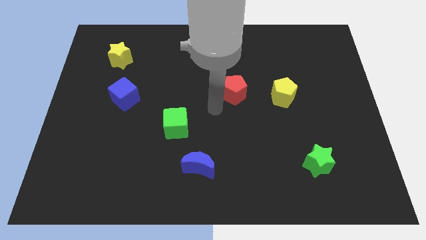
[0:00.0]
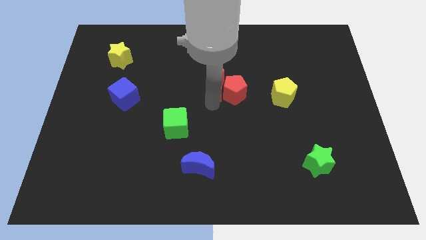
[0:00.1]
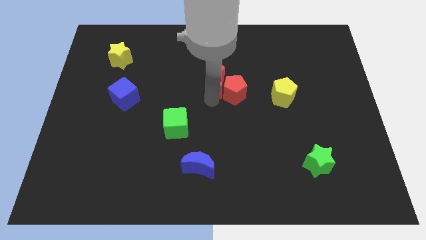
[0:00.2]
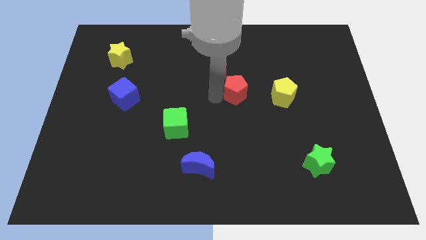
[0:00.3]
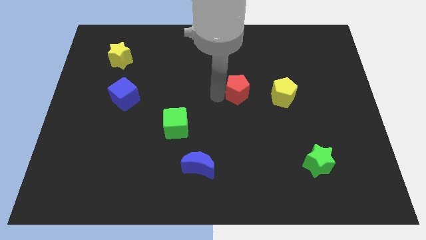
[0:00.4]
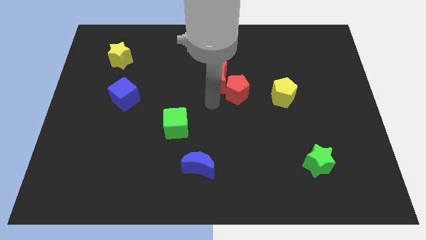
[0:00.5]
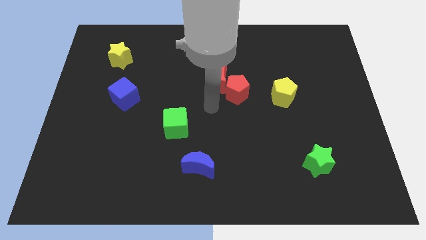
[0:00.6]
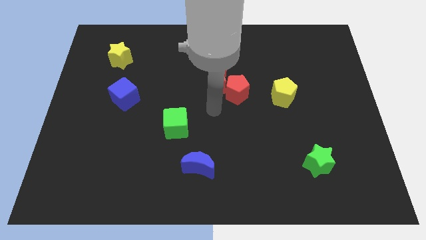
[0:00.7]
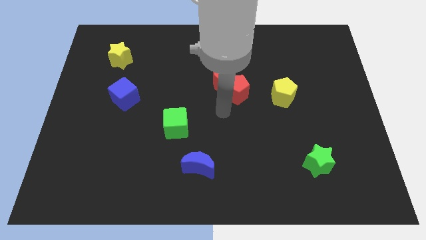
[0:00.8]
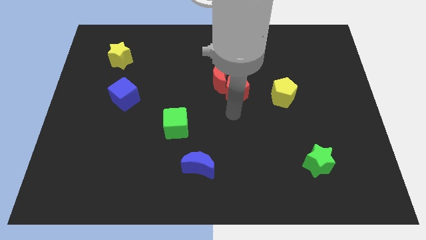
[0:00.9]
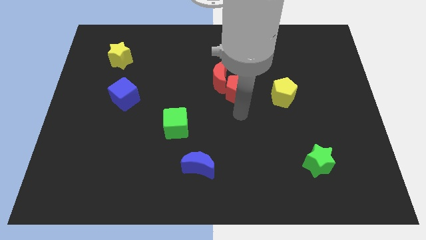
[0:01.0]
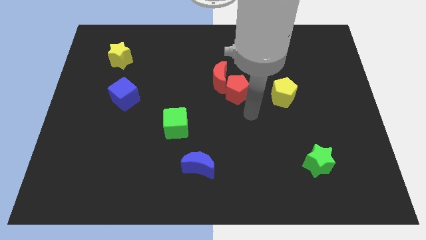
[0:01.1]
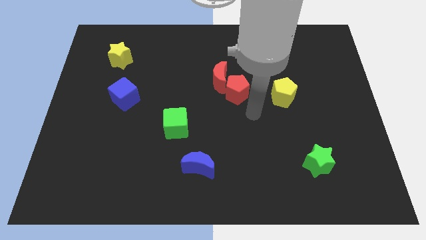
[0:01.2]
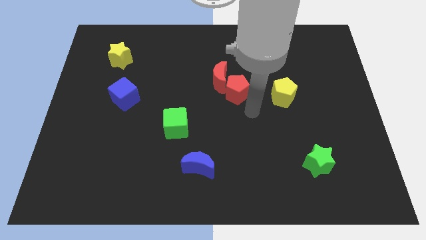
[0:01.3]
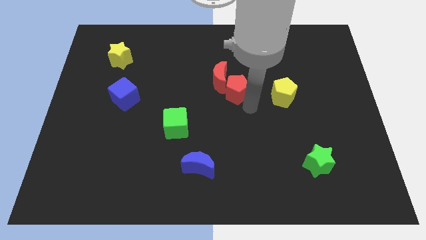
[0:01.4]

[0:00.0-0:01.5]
slightly move two red objects

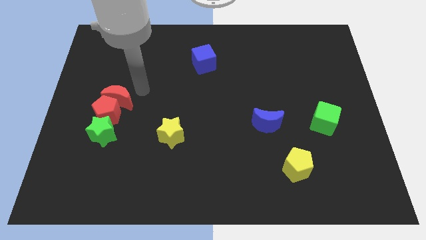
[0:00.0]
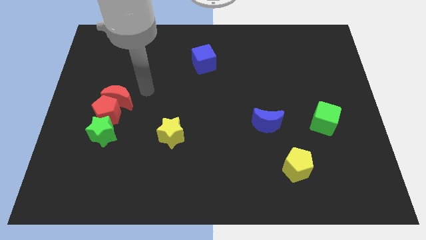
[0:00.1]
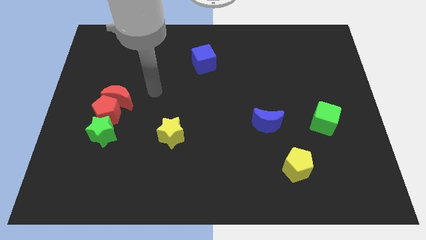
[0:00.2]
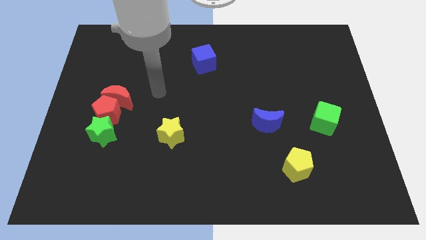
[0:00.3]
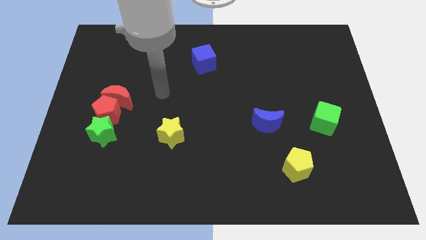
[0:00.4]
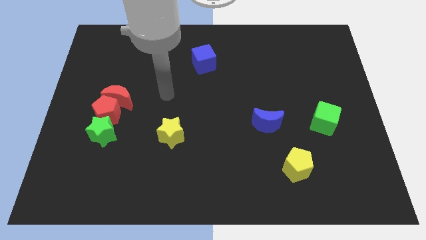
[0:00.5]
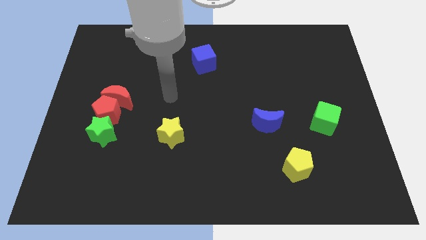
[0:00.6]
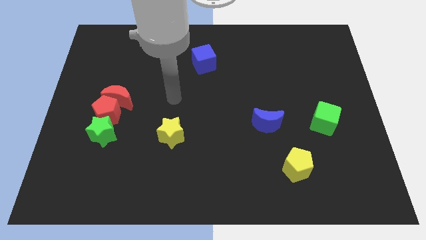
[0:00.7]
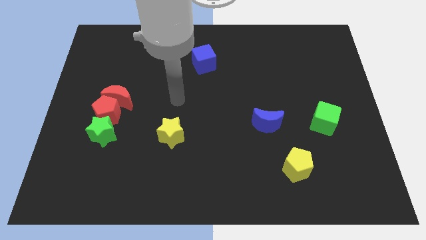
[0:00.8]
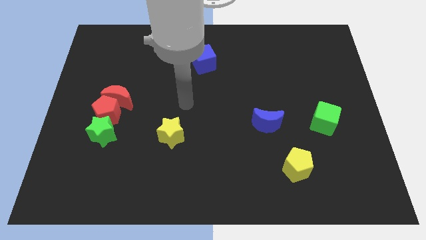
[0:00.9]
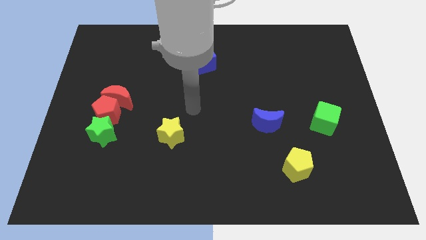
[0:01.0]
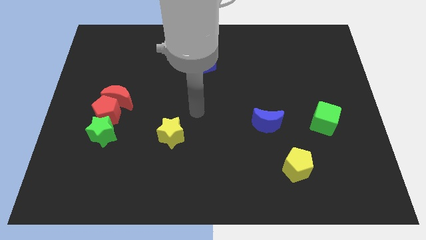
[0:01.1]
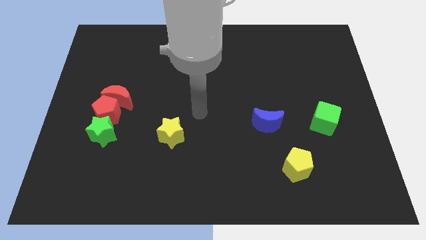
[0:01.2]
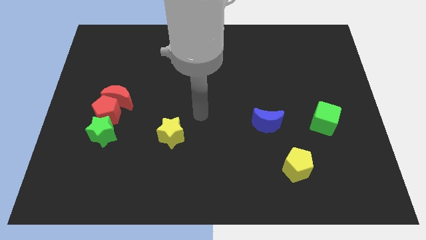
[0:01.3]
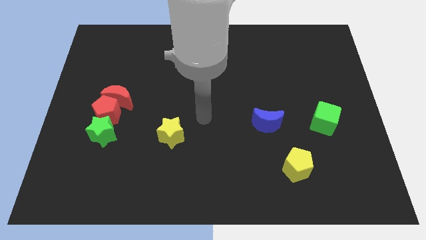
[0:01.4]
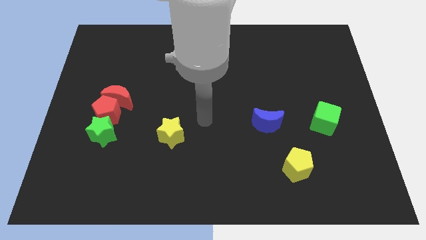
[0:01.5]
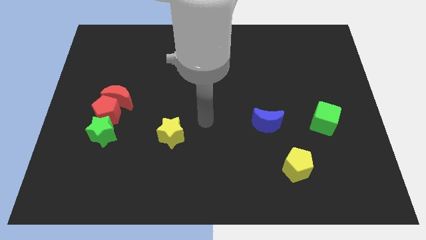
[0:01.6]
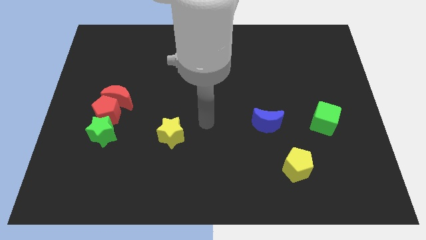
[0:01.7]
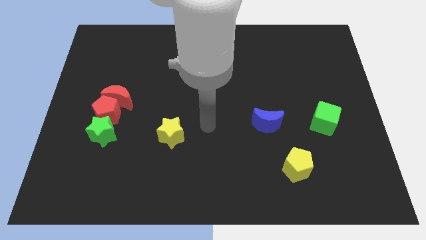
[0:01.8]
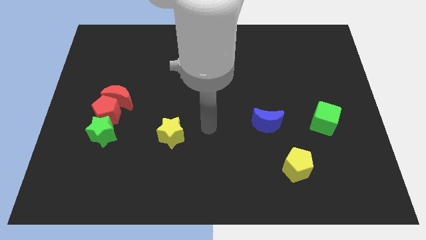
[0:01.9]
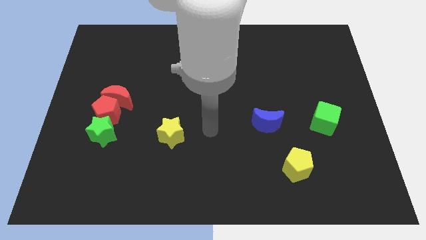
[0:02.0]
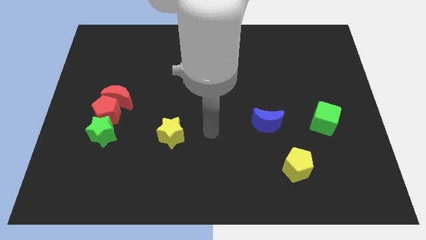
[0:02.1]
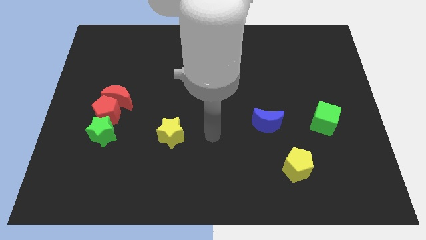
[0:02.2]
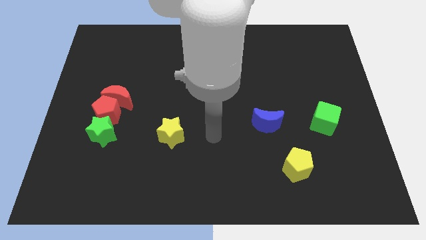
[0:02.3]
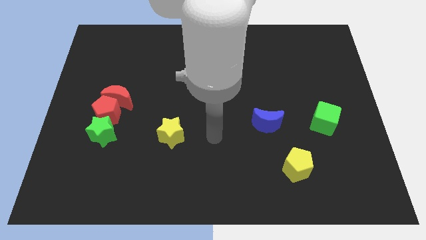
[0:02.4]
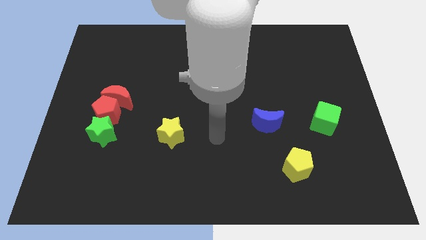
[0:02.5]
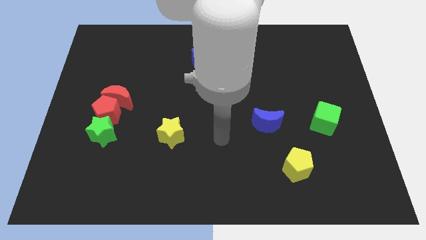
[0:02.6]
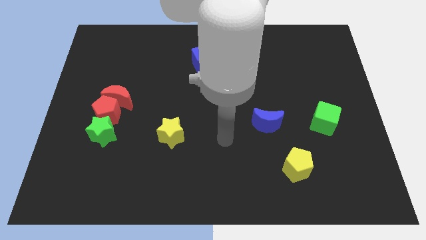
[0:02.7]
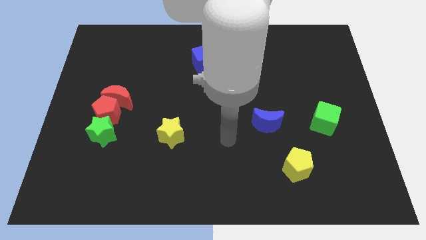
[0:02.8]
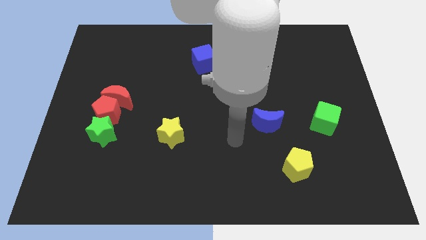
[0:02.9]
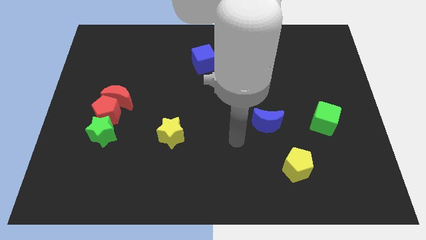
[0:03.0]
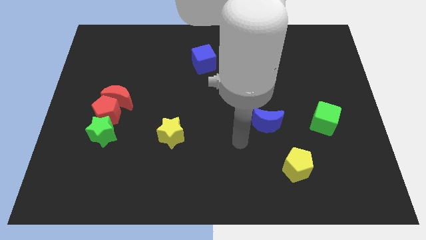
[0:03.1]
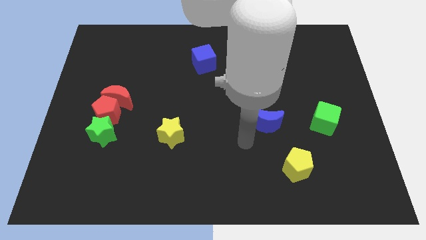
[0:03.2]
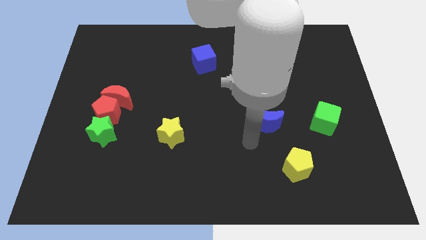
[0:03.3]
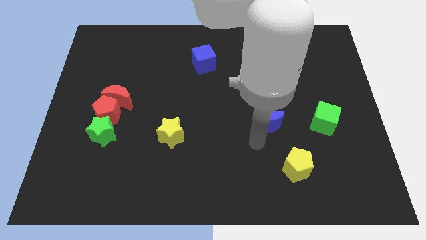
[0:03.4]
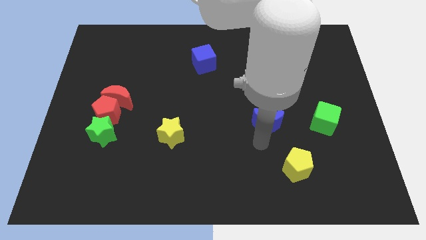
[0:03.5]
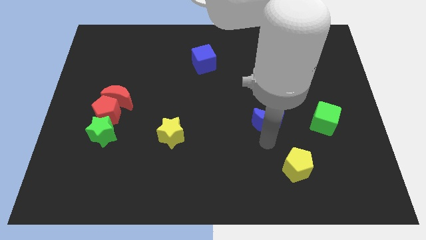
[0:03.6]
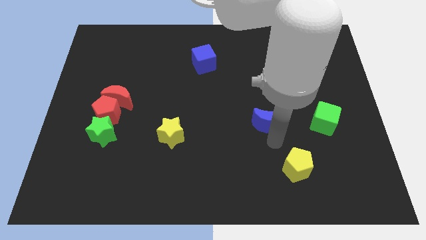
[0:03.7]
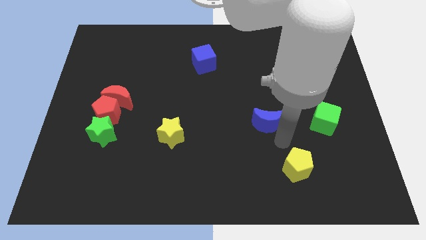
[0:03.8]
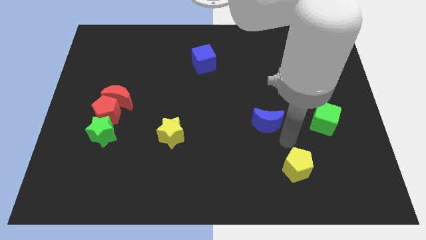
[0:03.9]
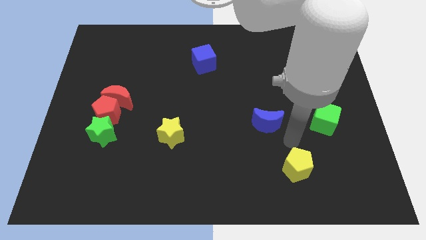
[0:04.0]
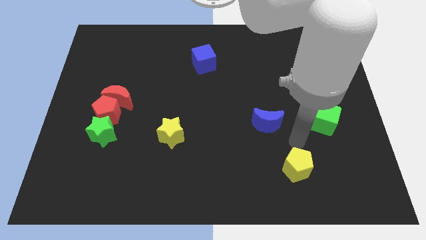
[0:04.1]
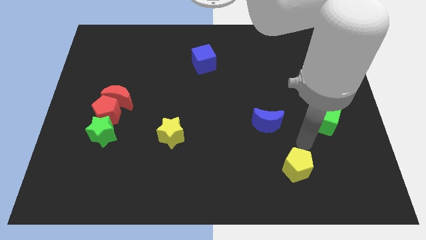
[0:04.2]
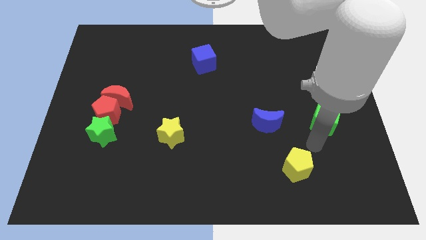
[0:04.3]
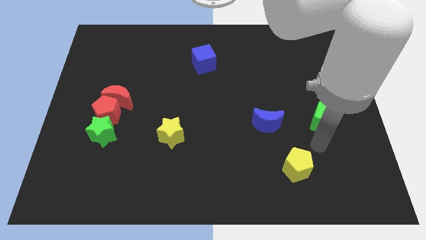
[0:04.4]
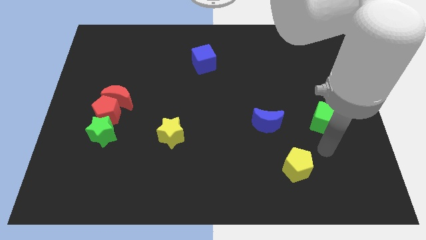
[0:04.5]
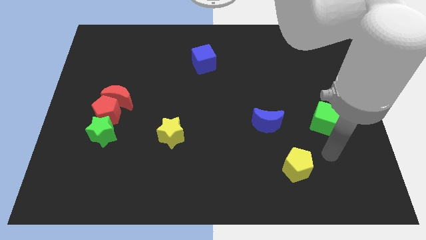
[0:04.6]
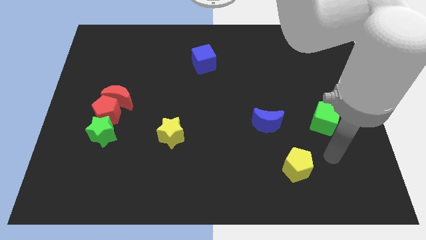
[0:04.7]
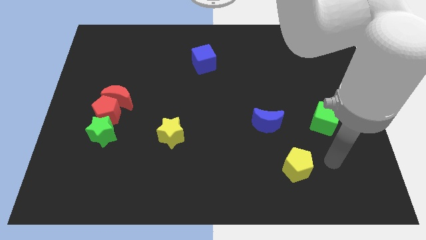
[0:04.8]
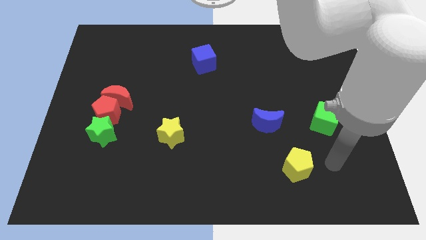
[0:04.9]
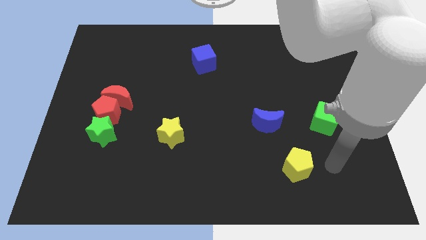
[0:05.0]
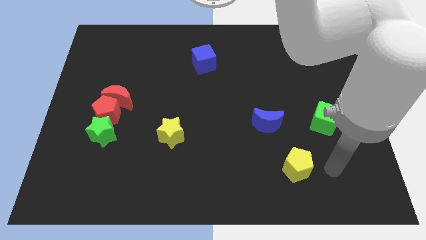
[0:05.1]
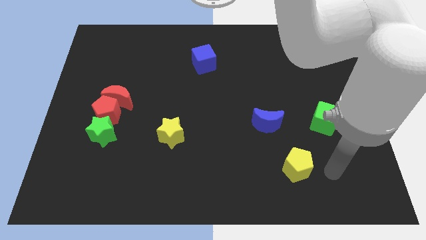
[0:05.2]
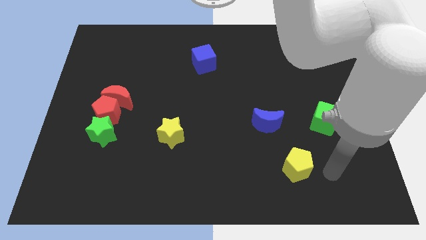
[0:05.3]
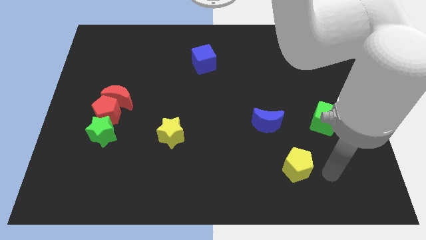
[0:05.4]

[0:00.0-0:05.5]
move your arm away from the red moon

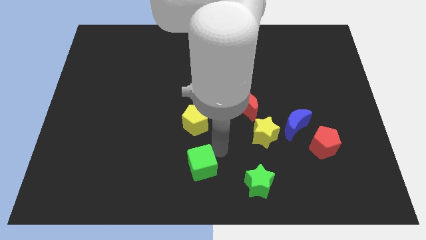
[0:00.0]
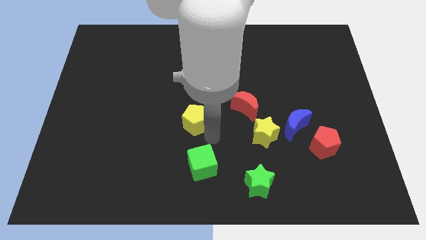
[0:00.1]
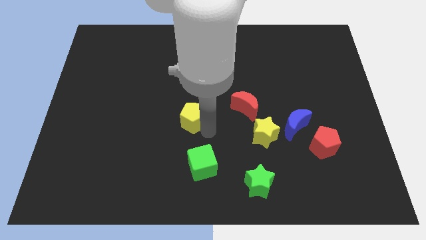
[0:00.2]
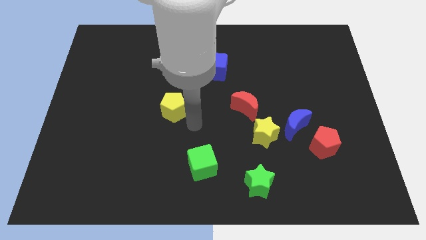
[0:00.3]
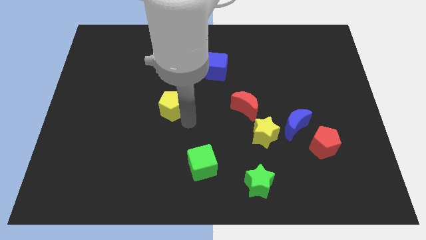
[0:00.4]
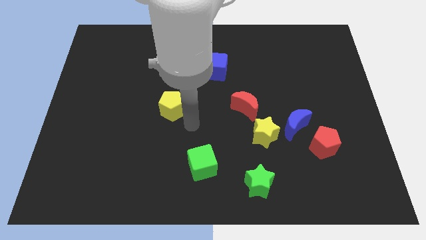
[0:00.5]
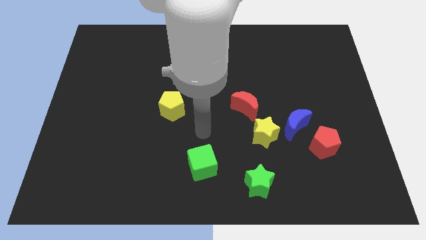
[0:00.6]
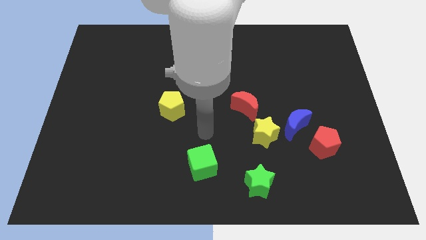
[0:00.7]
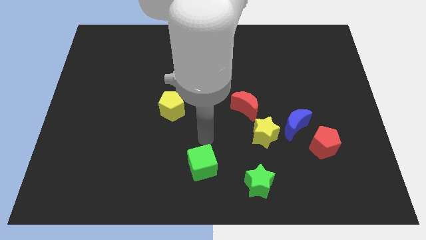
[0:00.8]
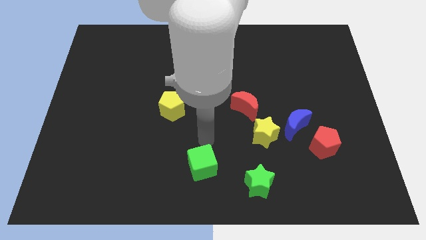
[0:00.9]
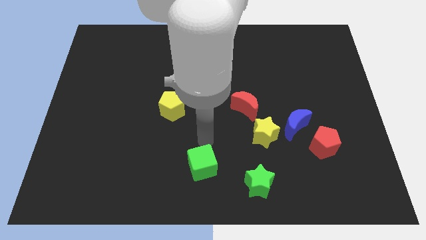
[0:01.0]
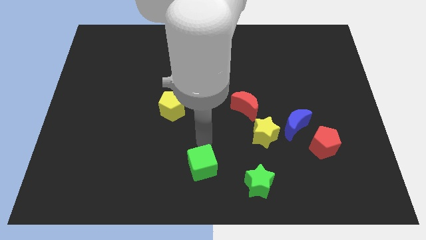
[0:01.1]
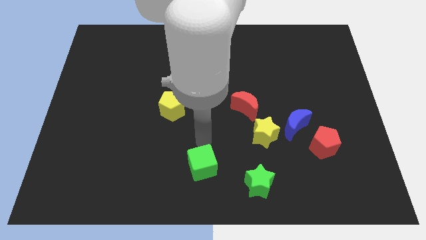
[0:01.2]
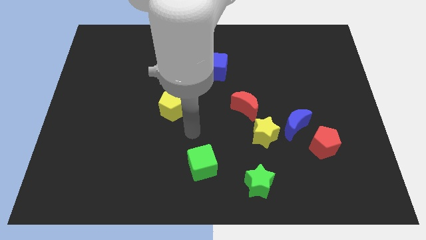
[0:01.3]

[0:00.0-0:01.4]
place the yellow pentagon horizontally to the left side of the red moon

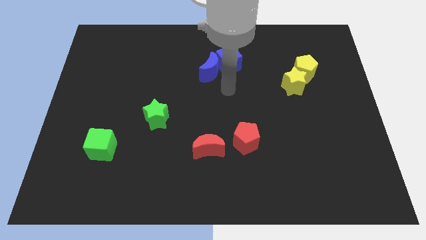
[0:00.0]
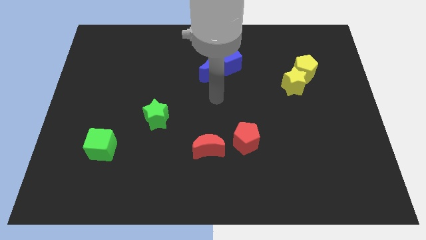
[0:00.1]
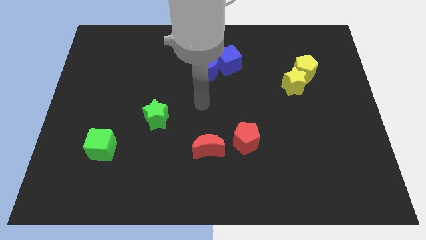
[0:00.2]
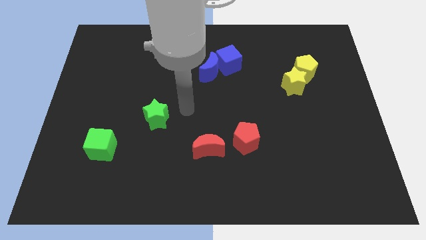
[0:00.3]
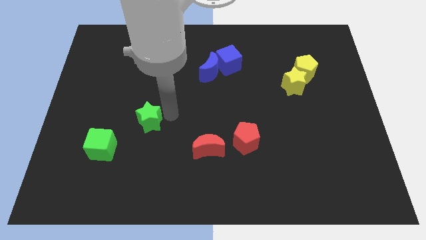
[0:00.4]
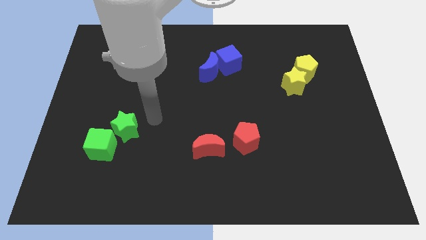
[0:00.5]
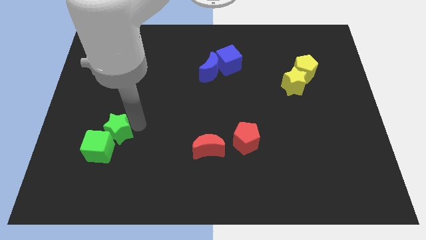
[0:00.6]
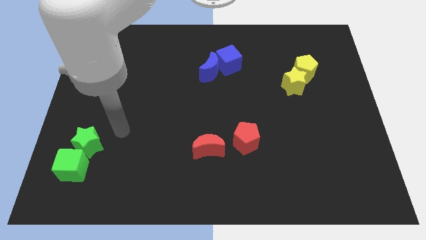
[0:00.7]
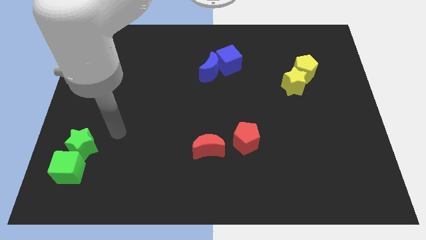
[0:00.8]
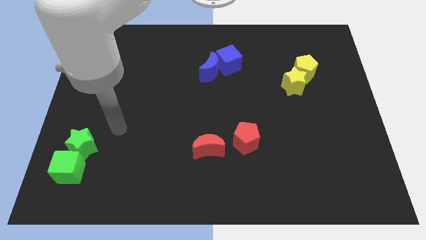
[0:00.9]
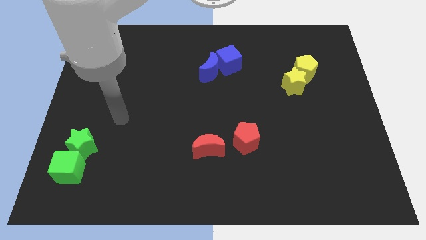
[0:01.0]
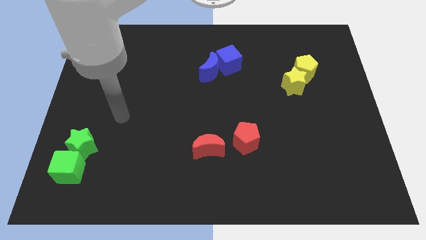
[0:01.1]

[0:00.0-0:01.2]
move the green blocks towards the bottom left corner
